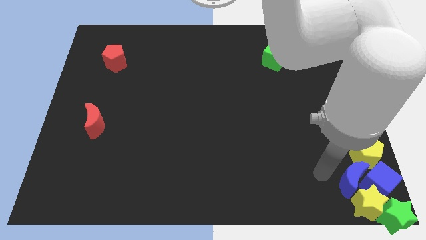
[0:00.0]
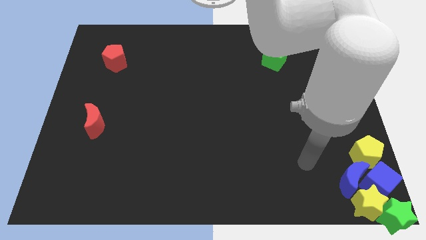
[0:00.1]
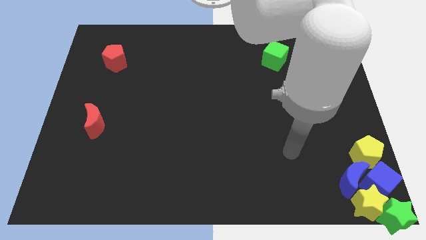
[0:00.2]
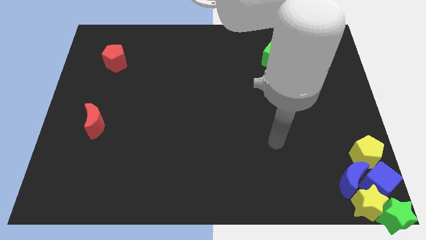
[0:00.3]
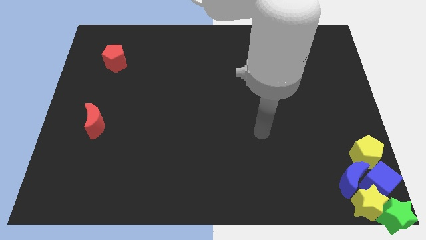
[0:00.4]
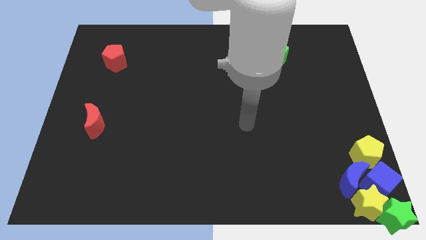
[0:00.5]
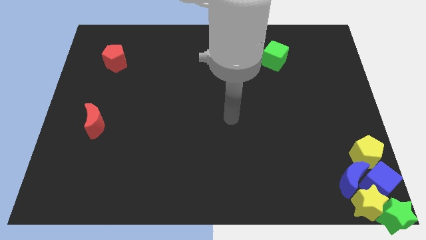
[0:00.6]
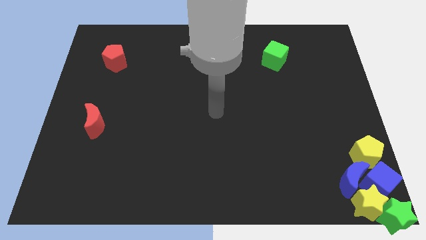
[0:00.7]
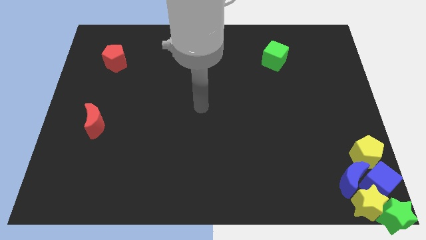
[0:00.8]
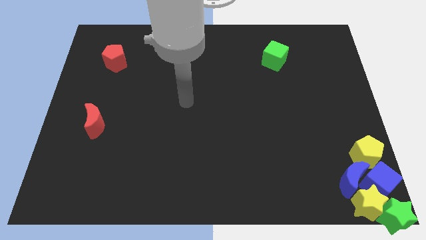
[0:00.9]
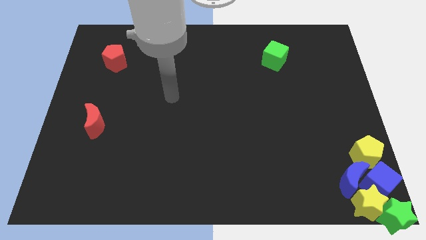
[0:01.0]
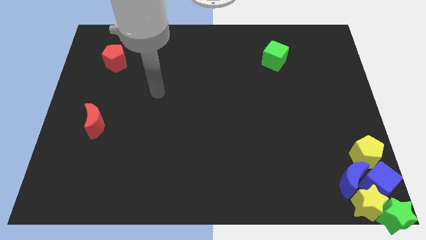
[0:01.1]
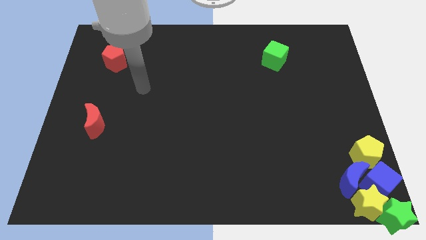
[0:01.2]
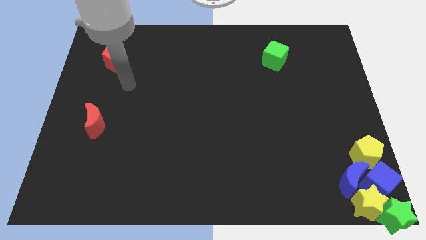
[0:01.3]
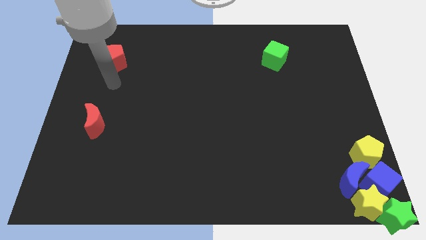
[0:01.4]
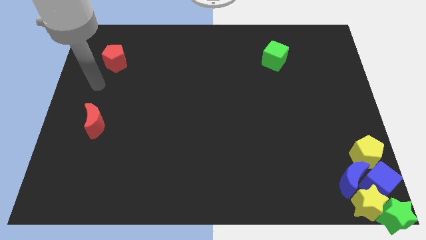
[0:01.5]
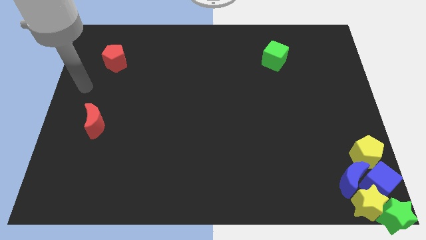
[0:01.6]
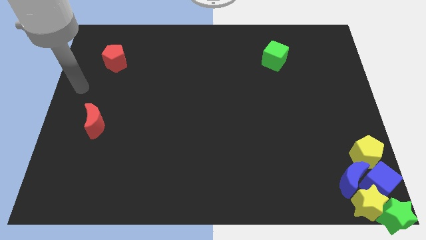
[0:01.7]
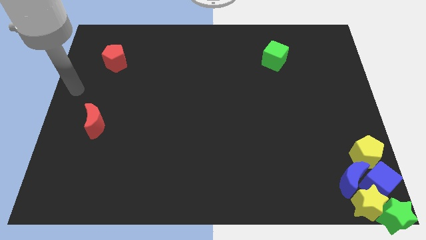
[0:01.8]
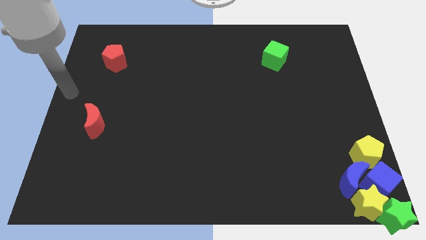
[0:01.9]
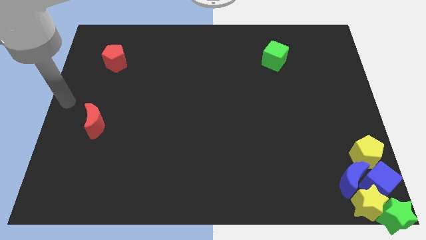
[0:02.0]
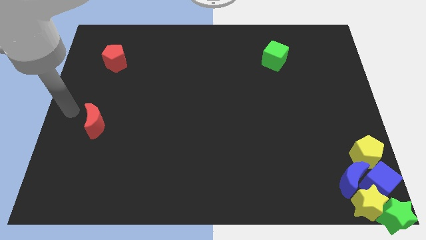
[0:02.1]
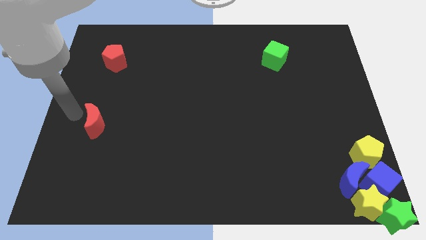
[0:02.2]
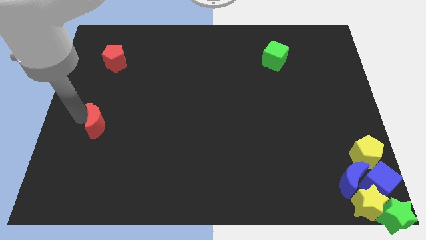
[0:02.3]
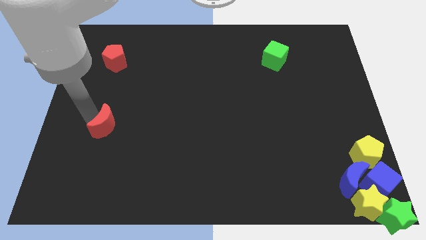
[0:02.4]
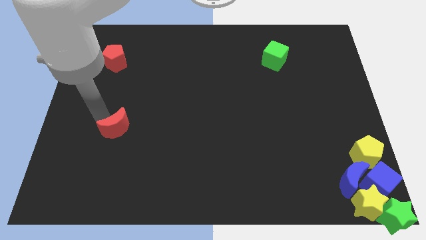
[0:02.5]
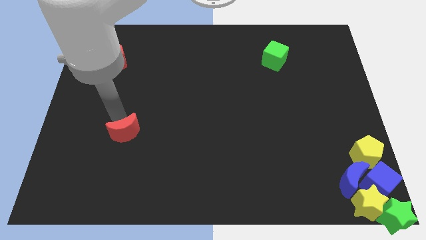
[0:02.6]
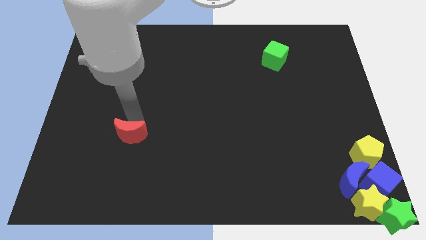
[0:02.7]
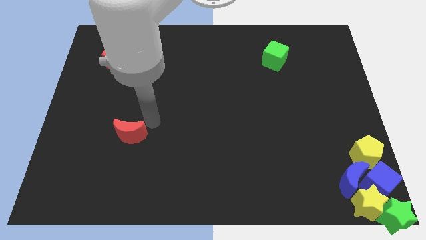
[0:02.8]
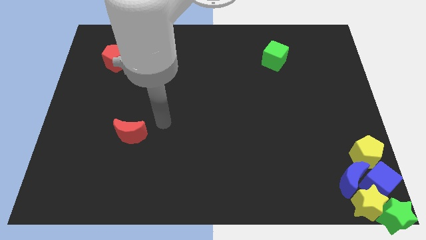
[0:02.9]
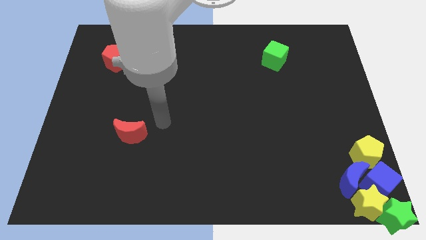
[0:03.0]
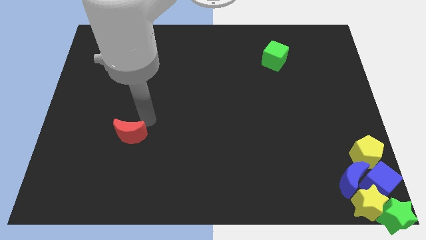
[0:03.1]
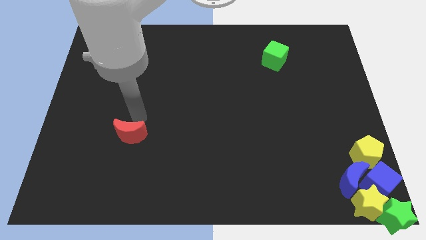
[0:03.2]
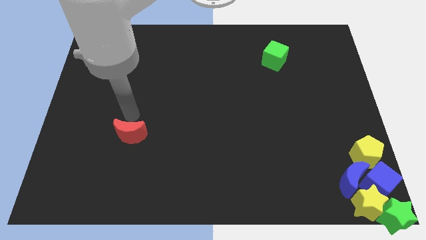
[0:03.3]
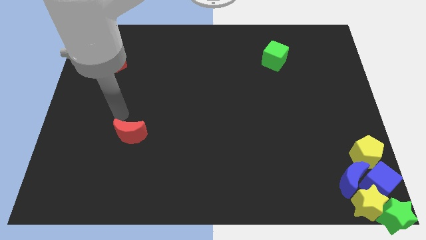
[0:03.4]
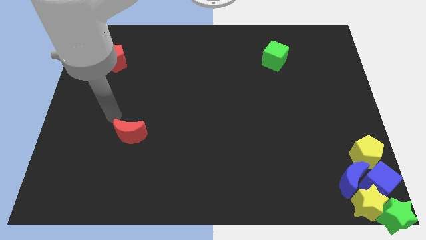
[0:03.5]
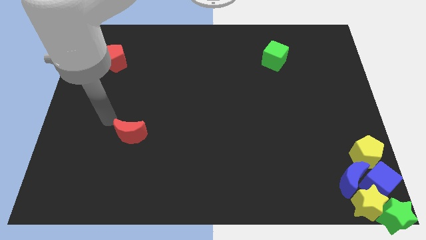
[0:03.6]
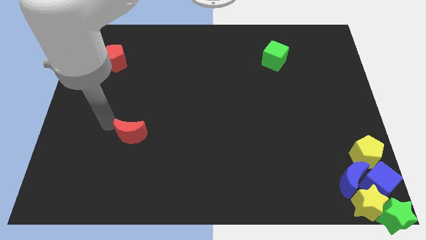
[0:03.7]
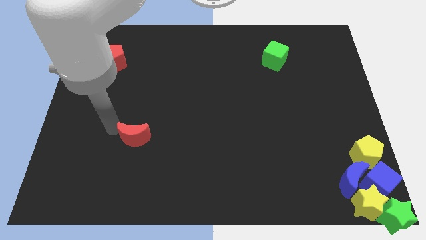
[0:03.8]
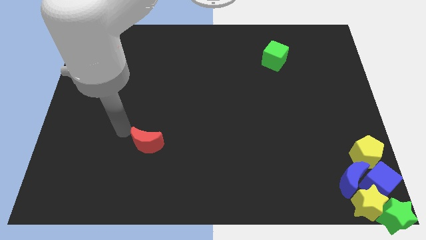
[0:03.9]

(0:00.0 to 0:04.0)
drag the red crescent towards the bottom center of the board

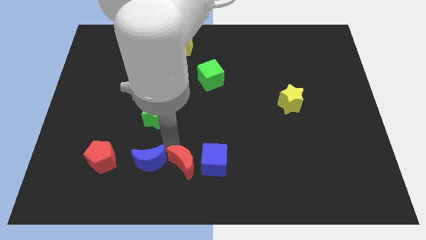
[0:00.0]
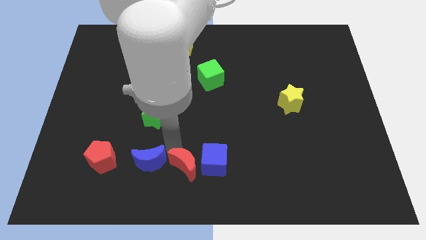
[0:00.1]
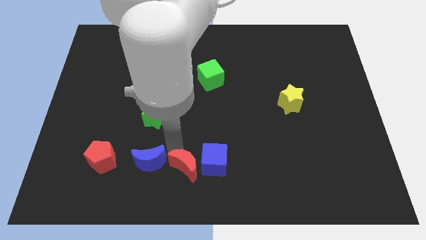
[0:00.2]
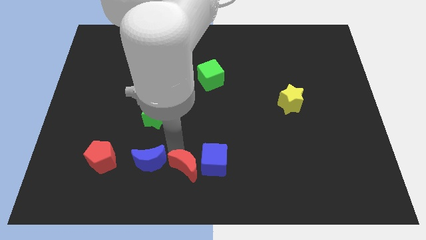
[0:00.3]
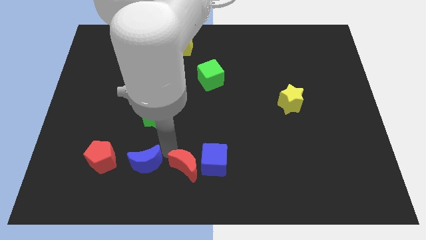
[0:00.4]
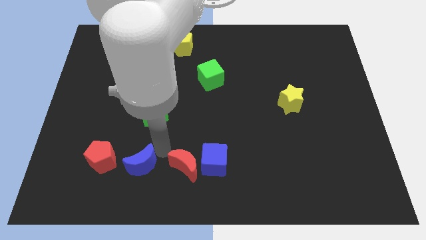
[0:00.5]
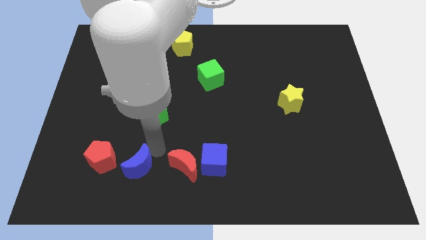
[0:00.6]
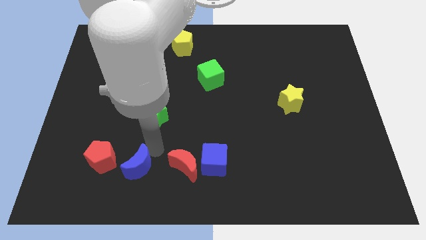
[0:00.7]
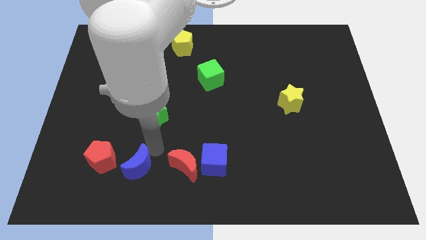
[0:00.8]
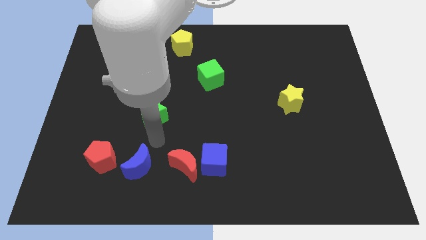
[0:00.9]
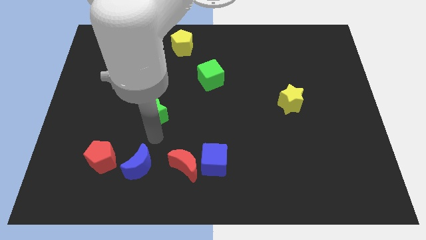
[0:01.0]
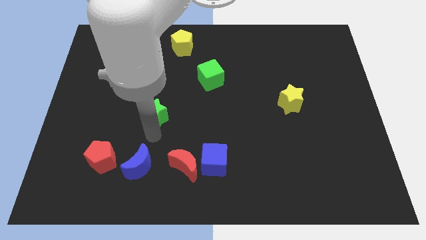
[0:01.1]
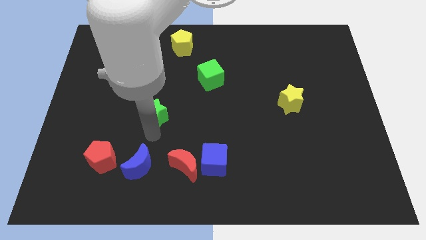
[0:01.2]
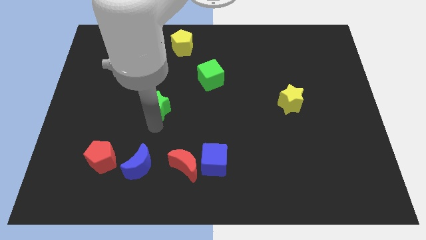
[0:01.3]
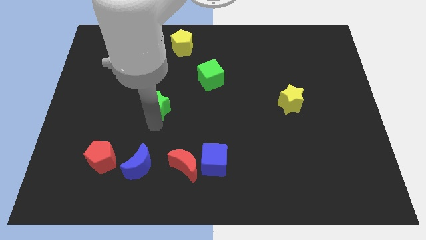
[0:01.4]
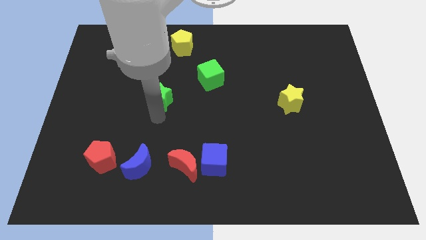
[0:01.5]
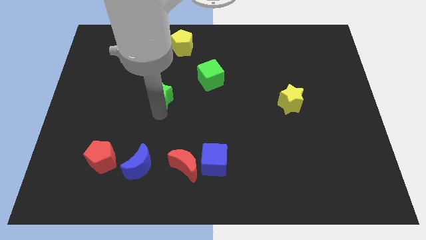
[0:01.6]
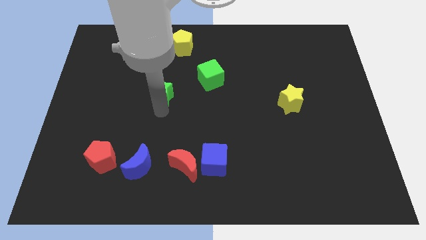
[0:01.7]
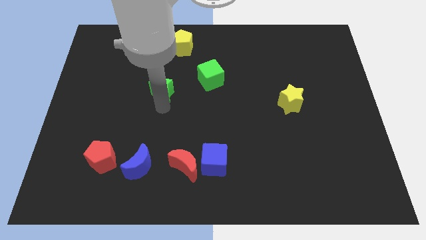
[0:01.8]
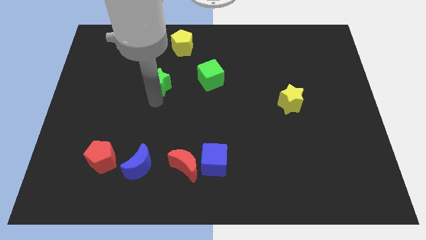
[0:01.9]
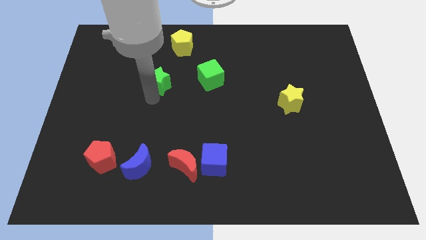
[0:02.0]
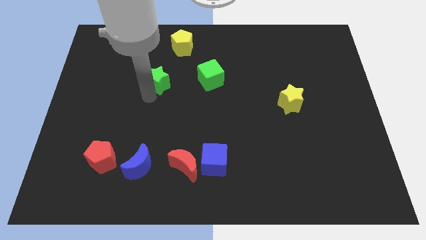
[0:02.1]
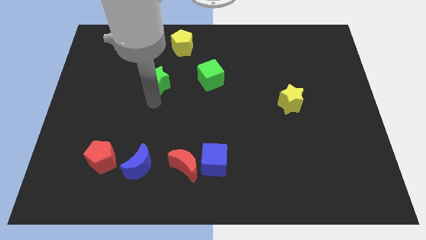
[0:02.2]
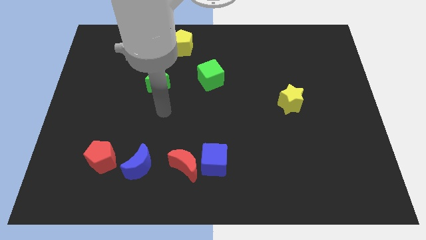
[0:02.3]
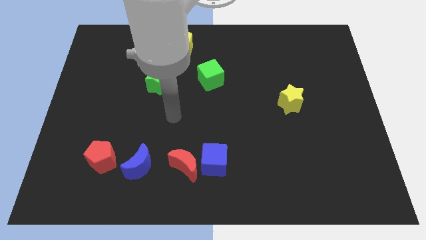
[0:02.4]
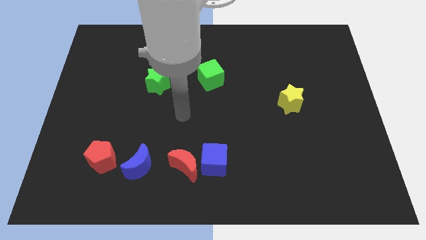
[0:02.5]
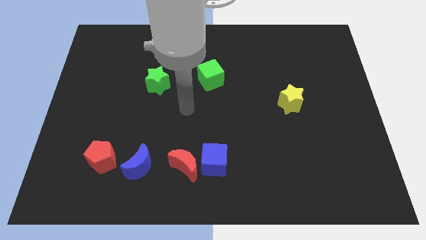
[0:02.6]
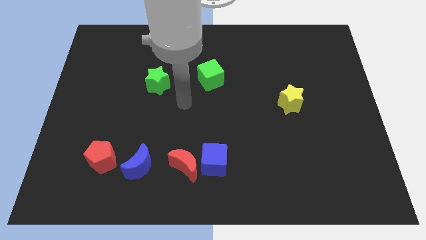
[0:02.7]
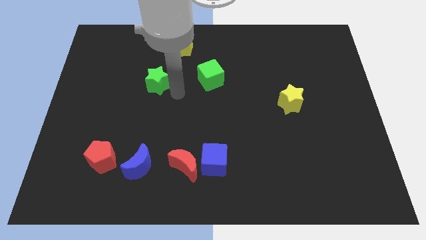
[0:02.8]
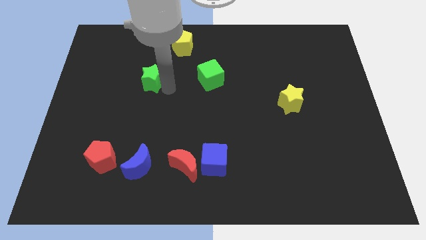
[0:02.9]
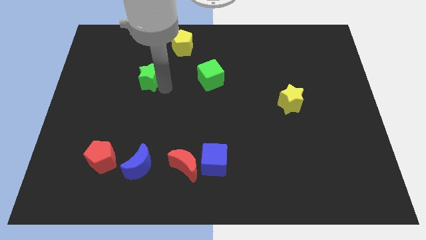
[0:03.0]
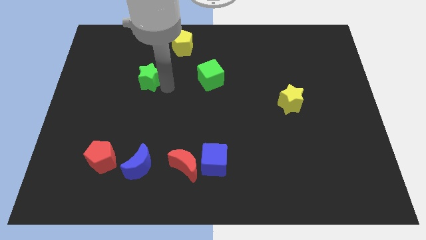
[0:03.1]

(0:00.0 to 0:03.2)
push green star diagonally to yellow pentagon

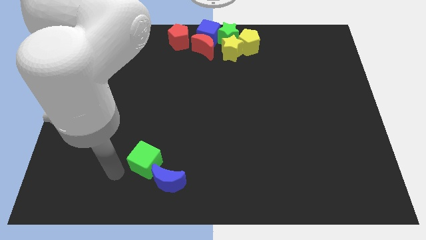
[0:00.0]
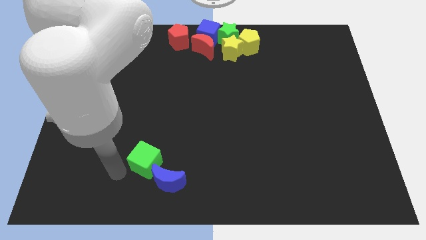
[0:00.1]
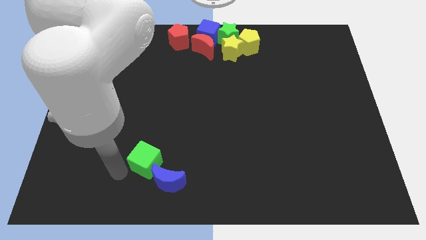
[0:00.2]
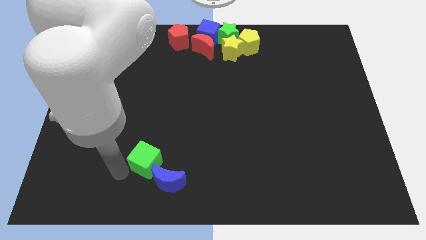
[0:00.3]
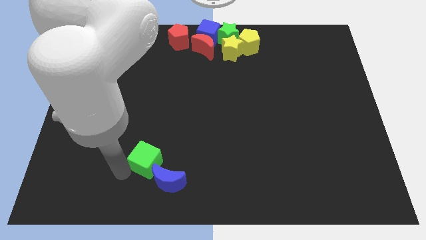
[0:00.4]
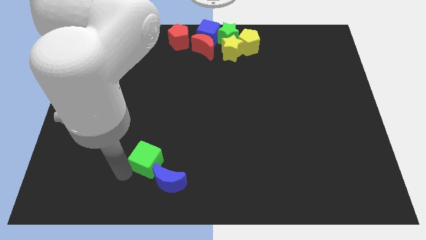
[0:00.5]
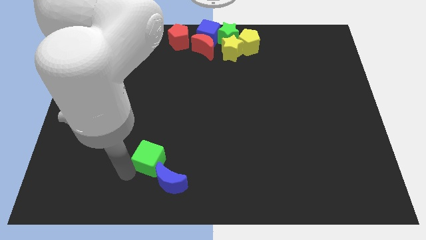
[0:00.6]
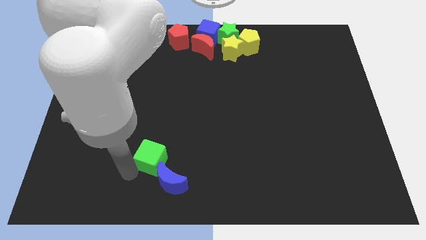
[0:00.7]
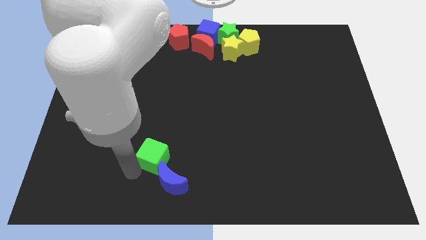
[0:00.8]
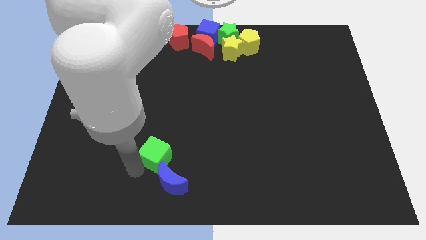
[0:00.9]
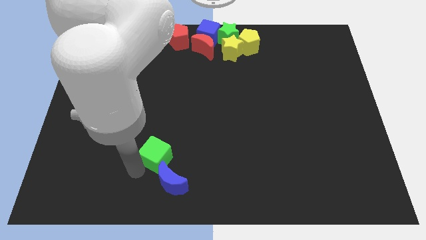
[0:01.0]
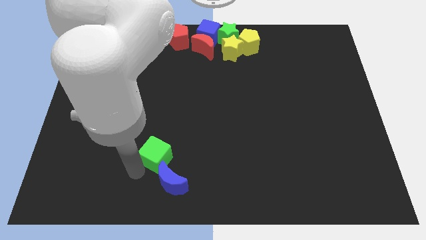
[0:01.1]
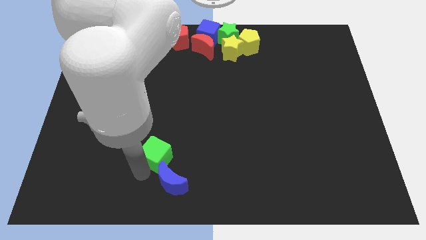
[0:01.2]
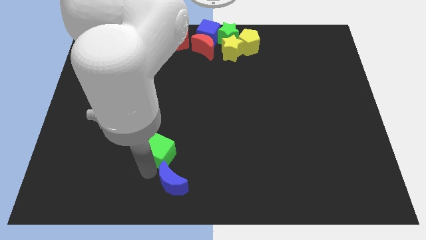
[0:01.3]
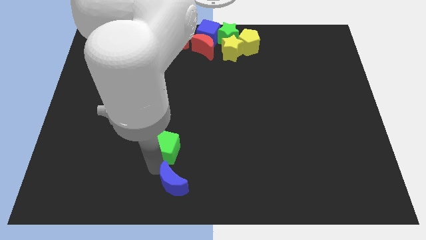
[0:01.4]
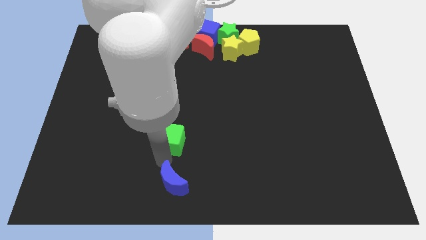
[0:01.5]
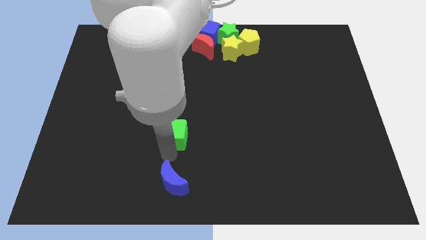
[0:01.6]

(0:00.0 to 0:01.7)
separate the green cube and blue crescent

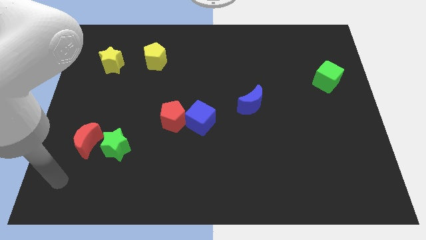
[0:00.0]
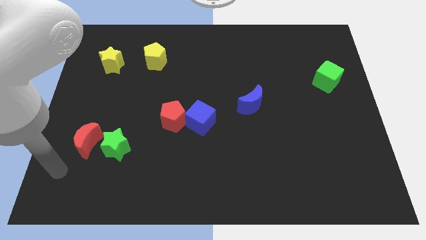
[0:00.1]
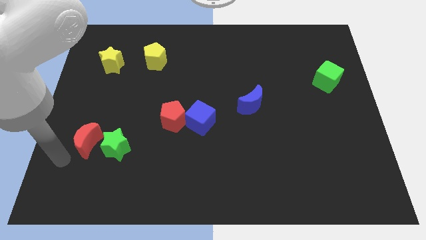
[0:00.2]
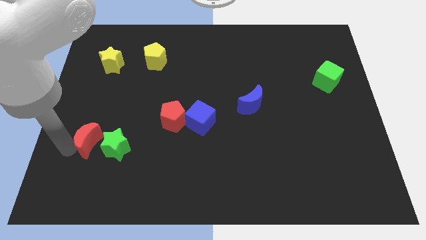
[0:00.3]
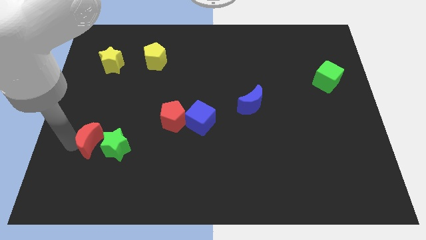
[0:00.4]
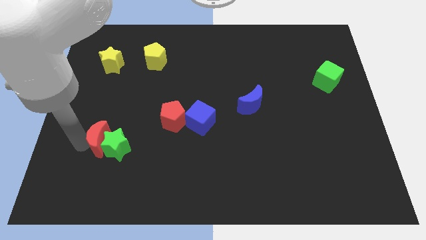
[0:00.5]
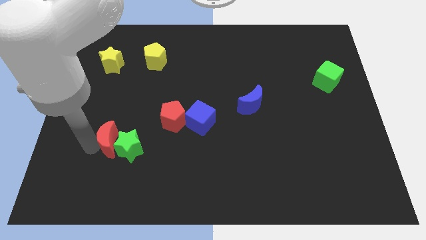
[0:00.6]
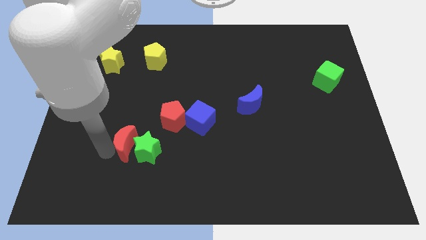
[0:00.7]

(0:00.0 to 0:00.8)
push red crescent in to green star
